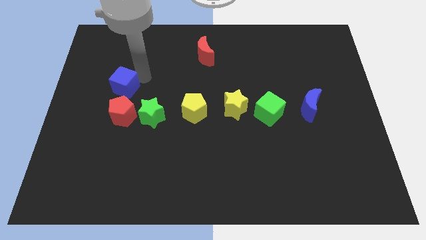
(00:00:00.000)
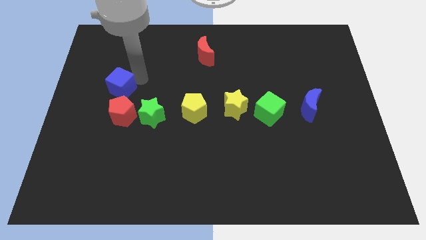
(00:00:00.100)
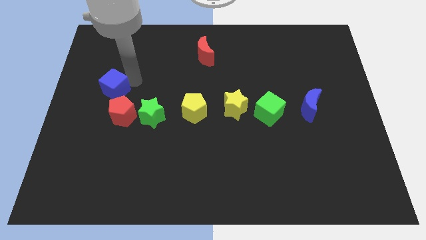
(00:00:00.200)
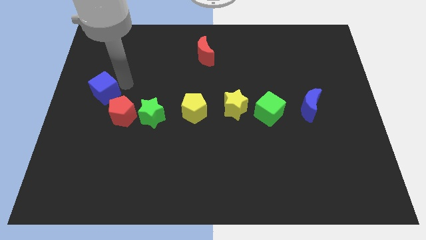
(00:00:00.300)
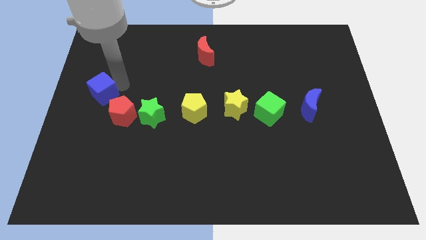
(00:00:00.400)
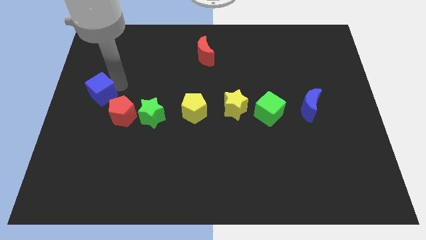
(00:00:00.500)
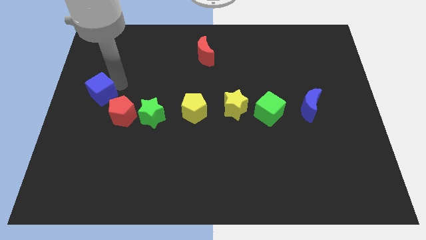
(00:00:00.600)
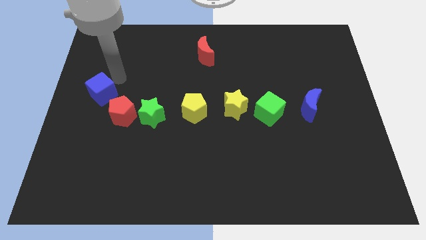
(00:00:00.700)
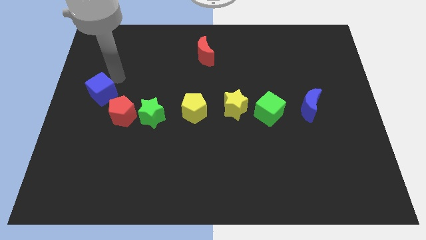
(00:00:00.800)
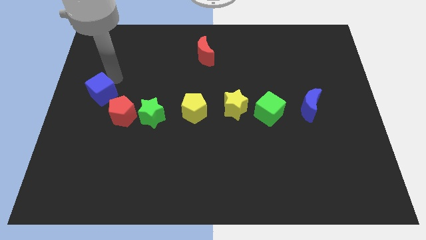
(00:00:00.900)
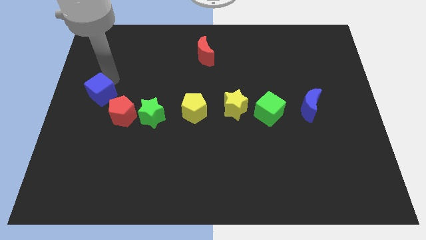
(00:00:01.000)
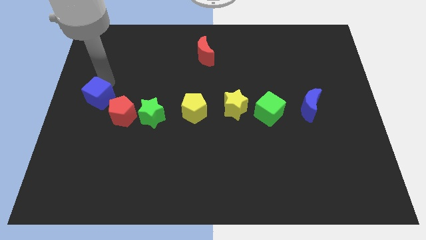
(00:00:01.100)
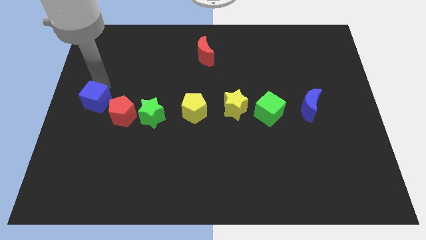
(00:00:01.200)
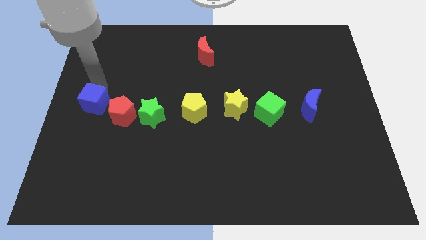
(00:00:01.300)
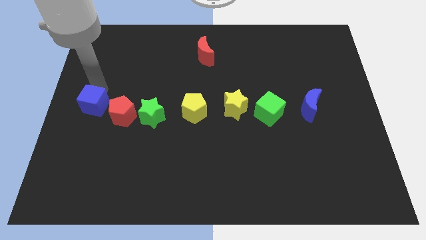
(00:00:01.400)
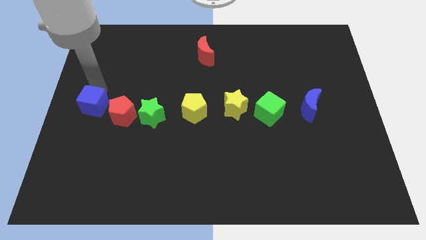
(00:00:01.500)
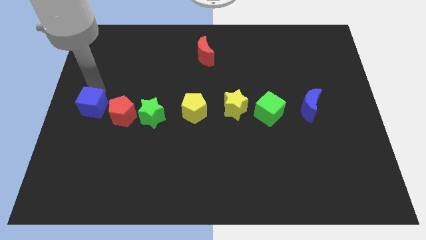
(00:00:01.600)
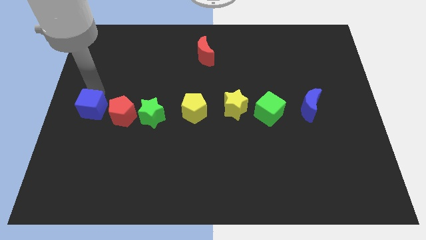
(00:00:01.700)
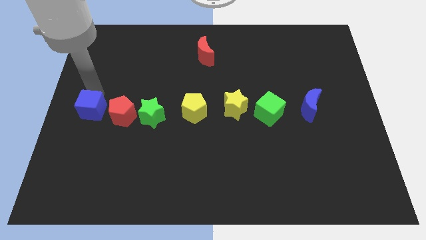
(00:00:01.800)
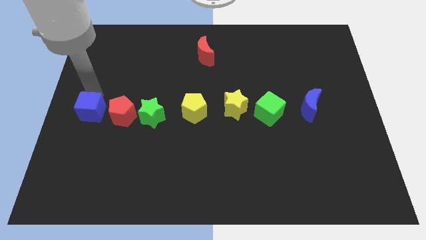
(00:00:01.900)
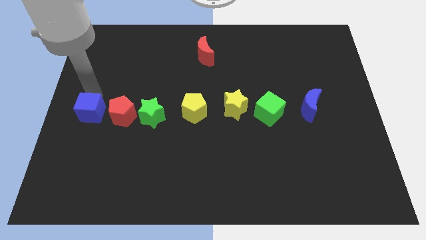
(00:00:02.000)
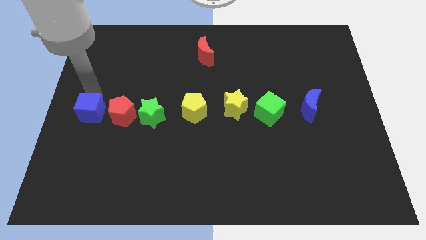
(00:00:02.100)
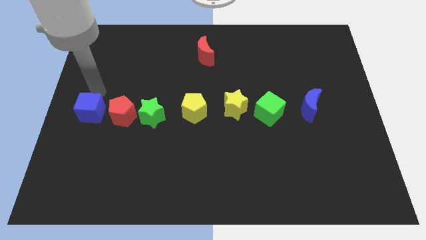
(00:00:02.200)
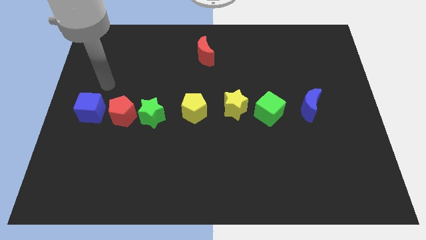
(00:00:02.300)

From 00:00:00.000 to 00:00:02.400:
place the blue cube to the left of red pentagon in a line

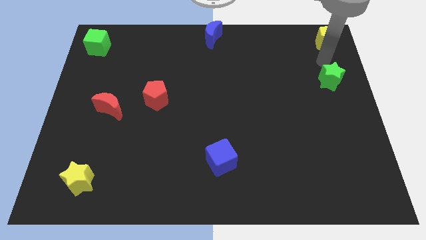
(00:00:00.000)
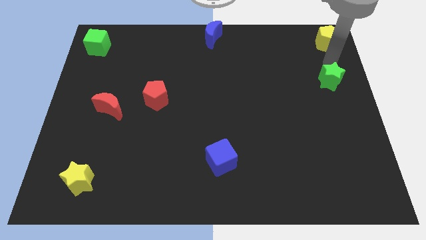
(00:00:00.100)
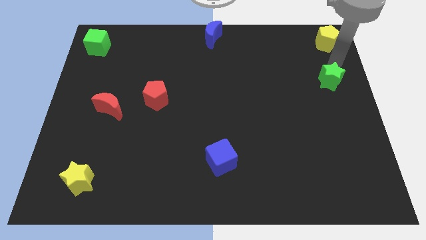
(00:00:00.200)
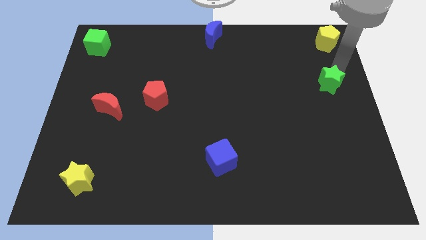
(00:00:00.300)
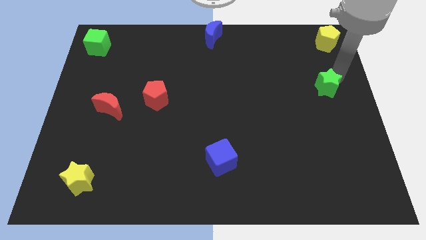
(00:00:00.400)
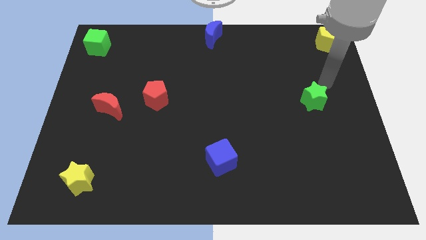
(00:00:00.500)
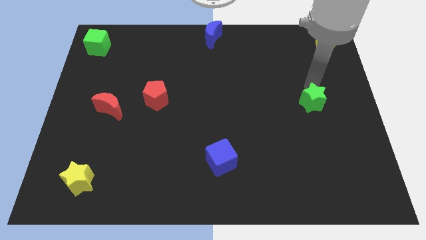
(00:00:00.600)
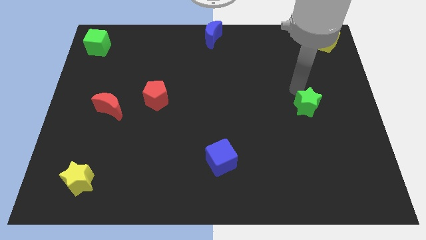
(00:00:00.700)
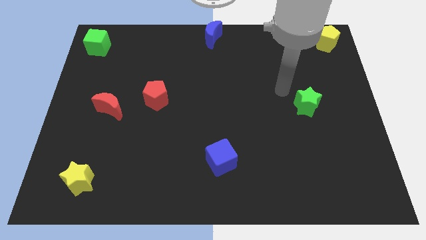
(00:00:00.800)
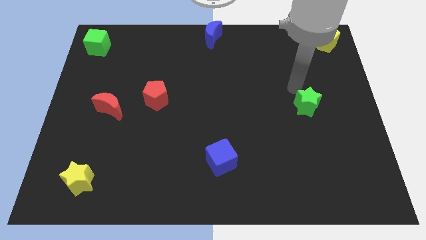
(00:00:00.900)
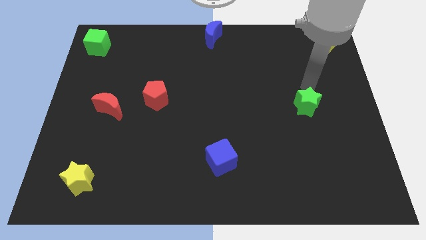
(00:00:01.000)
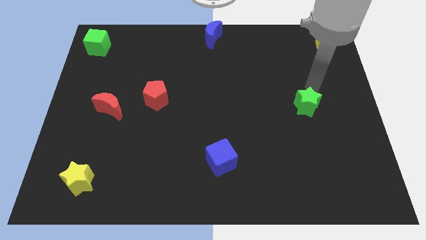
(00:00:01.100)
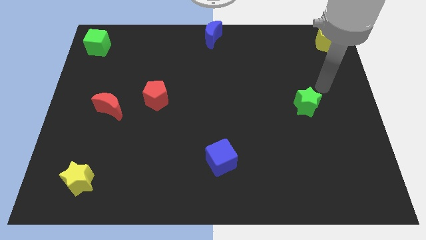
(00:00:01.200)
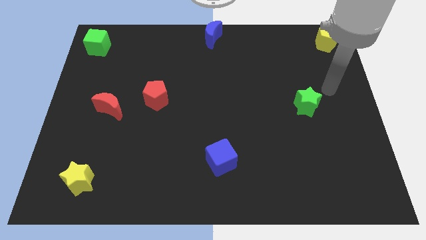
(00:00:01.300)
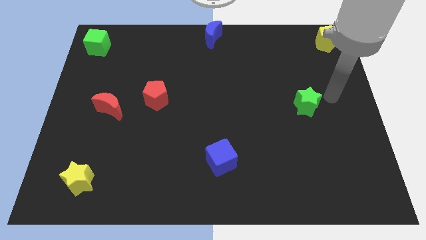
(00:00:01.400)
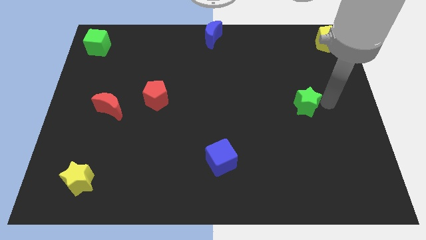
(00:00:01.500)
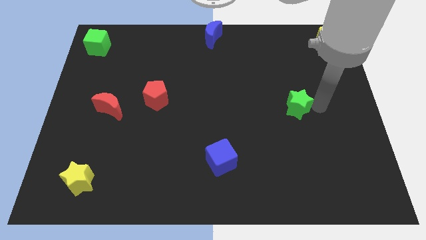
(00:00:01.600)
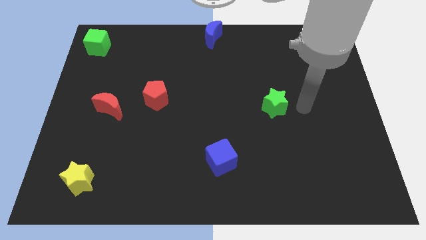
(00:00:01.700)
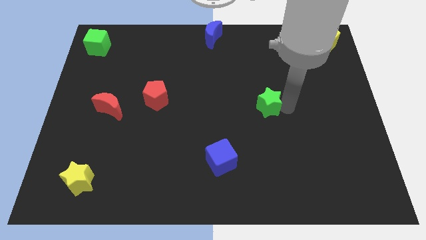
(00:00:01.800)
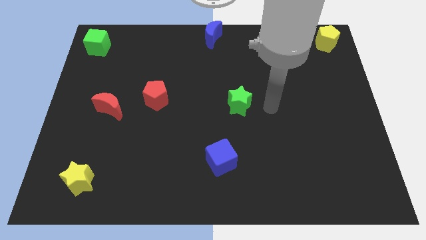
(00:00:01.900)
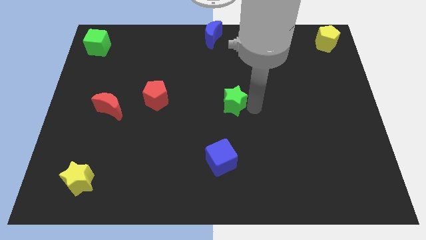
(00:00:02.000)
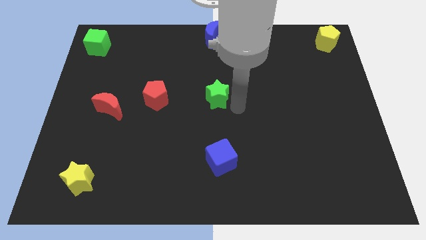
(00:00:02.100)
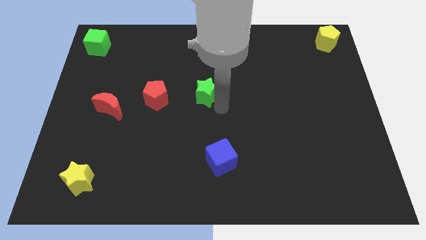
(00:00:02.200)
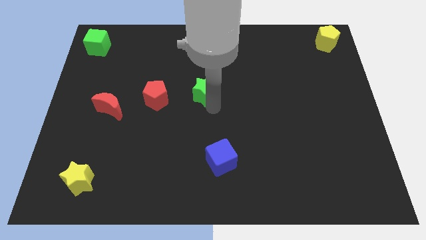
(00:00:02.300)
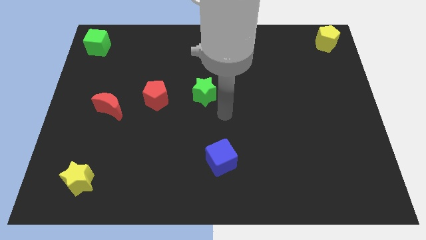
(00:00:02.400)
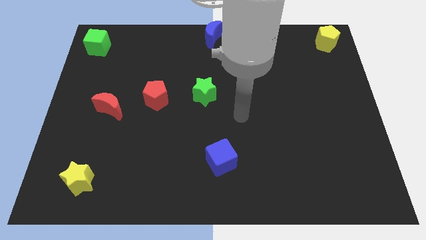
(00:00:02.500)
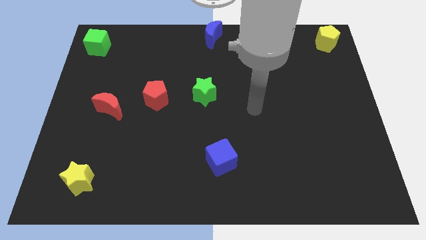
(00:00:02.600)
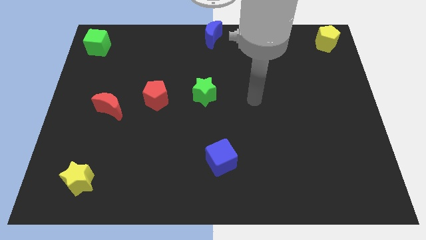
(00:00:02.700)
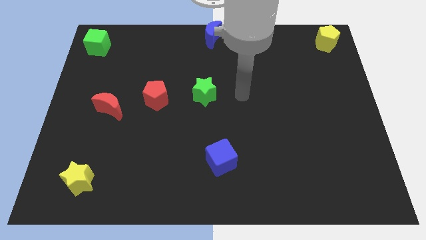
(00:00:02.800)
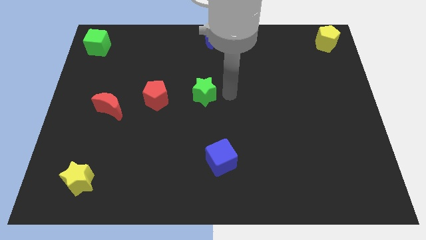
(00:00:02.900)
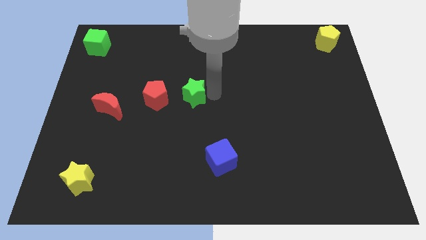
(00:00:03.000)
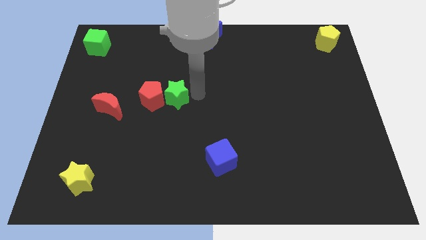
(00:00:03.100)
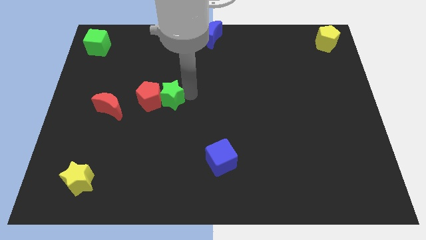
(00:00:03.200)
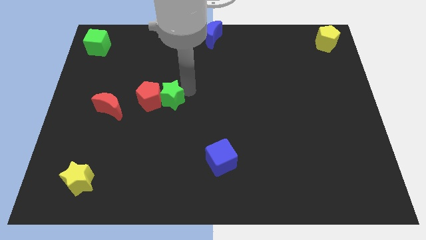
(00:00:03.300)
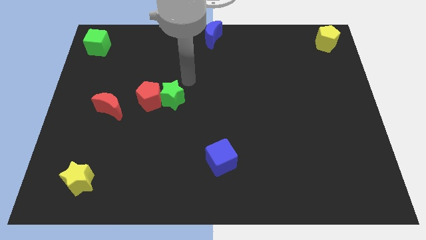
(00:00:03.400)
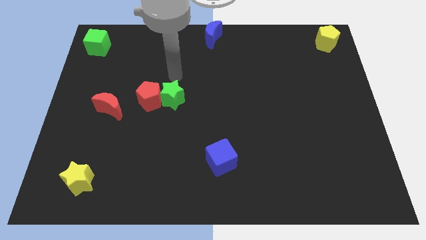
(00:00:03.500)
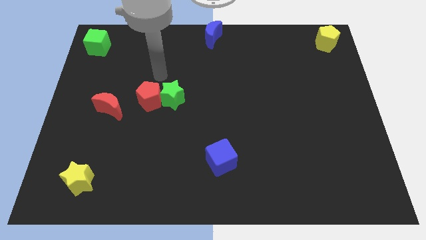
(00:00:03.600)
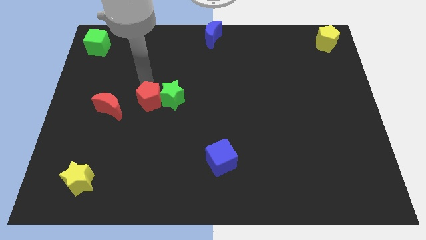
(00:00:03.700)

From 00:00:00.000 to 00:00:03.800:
move green star right to red pentagon

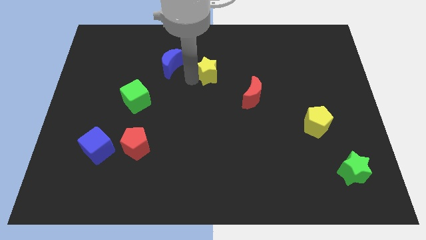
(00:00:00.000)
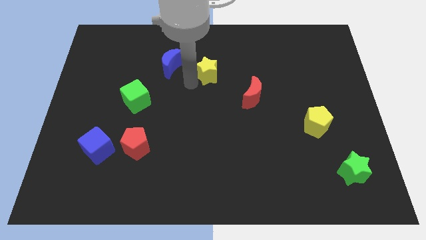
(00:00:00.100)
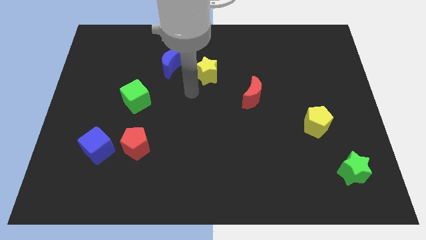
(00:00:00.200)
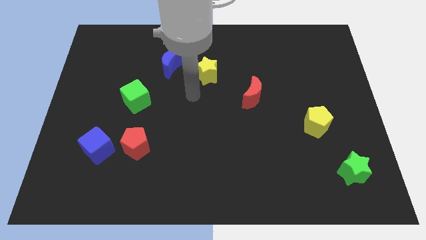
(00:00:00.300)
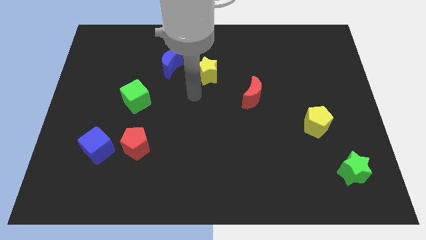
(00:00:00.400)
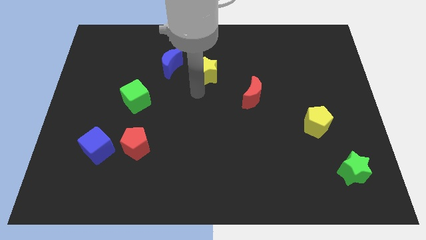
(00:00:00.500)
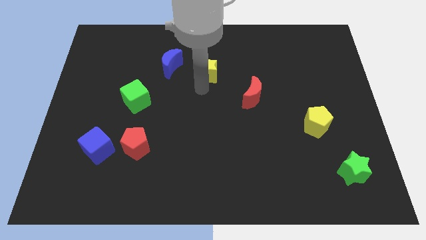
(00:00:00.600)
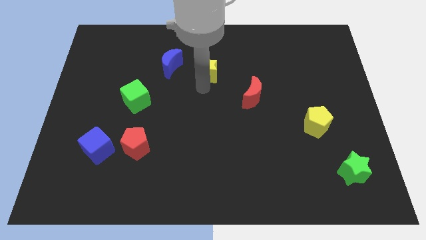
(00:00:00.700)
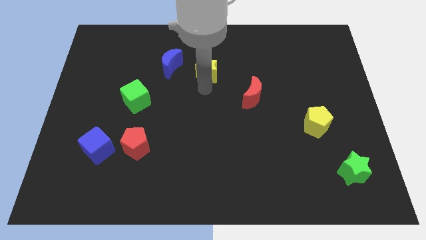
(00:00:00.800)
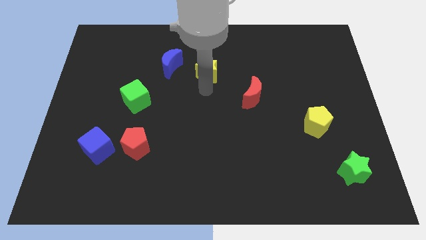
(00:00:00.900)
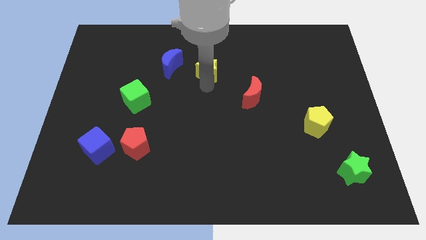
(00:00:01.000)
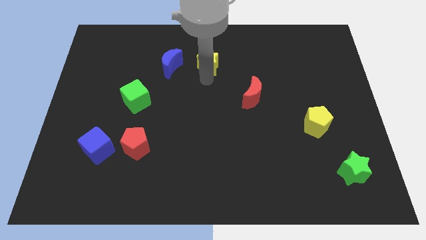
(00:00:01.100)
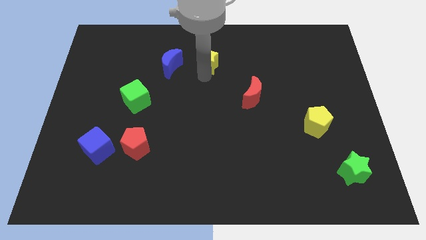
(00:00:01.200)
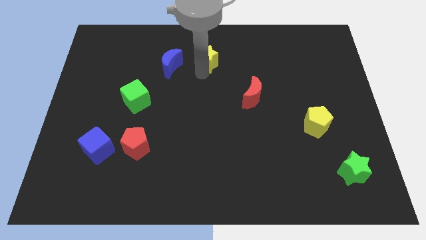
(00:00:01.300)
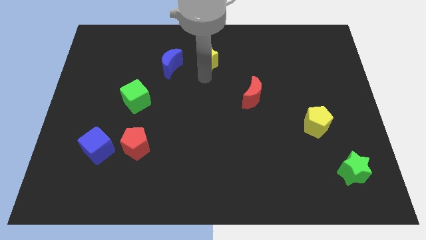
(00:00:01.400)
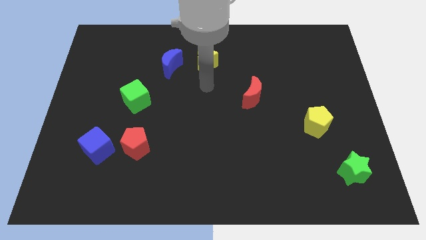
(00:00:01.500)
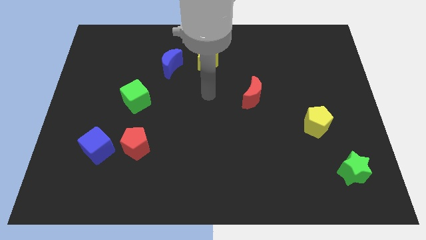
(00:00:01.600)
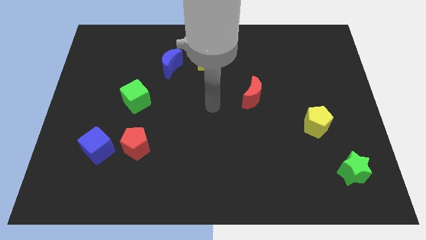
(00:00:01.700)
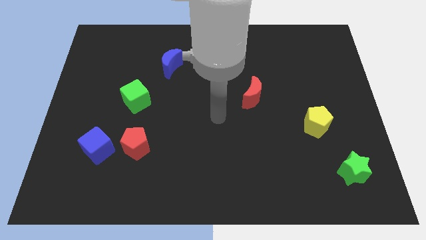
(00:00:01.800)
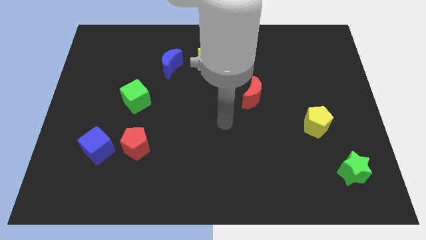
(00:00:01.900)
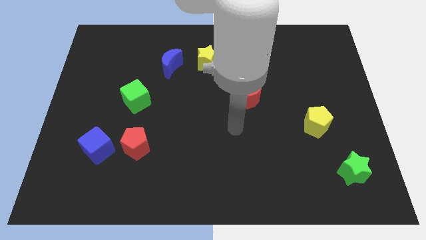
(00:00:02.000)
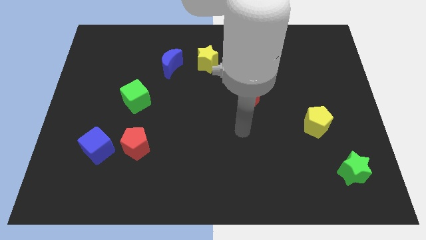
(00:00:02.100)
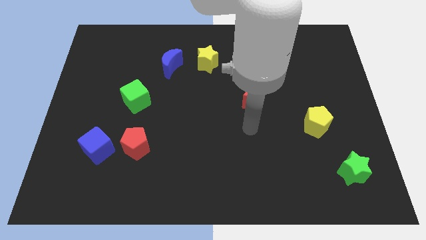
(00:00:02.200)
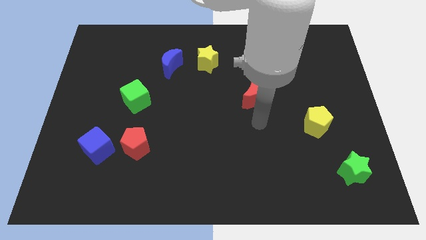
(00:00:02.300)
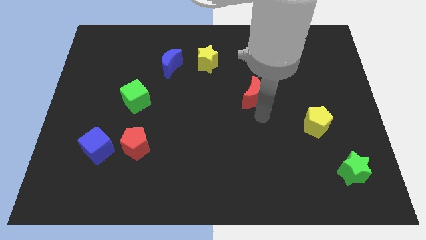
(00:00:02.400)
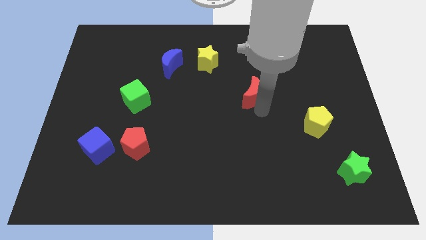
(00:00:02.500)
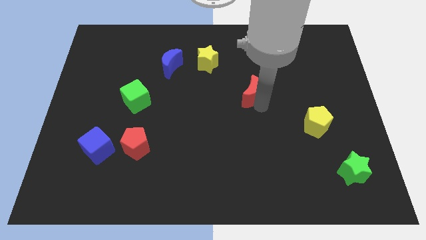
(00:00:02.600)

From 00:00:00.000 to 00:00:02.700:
move the arm to the red moon
